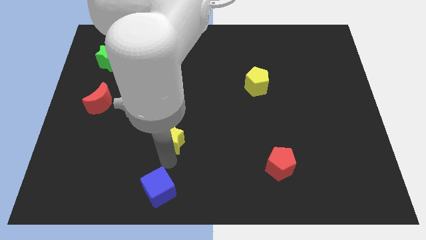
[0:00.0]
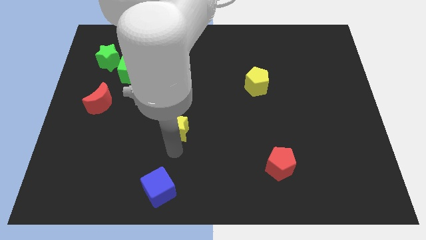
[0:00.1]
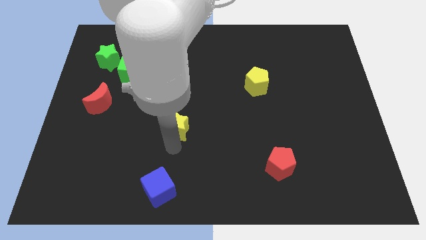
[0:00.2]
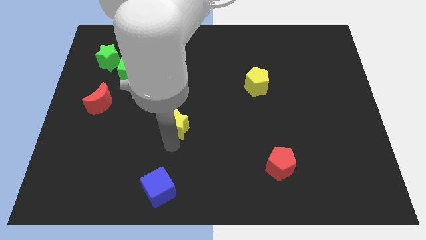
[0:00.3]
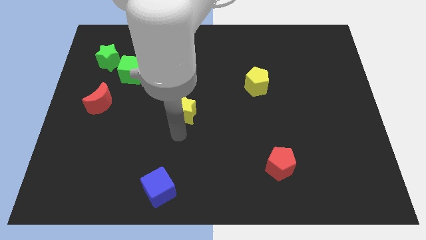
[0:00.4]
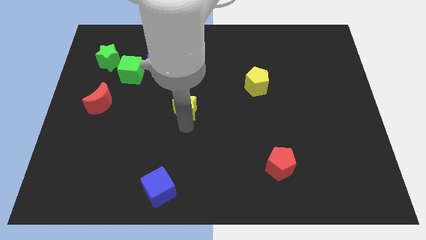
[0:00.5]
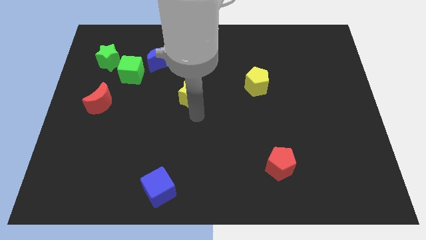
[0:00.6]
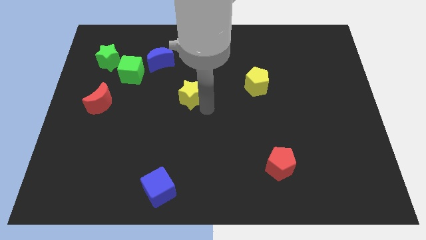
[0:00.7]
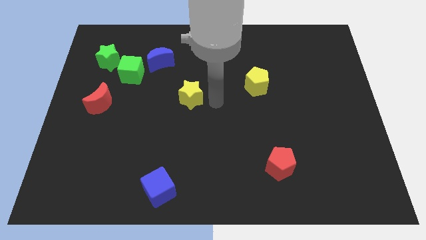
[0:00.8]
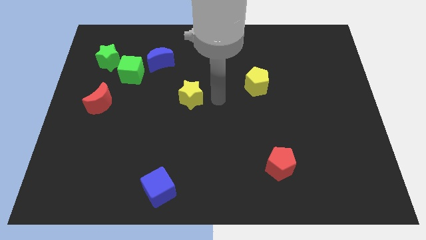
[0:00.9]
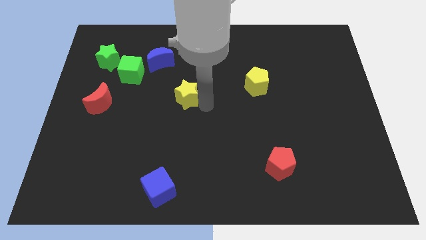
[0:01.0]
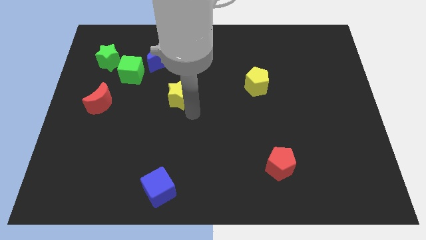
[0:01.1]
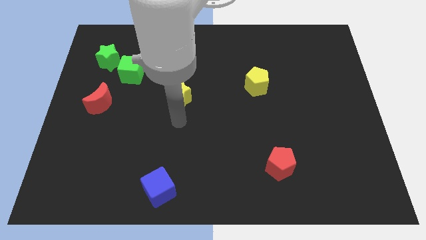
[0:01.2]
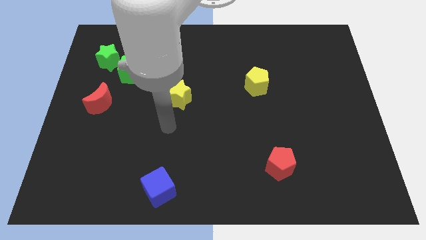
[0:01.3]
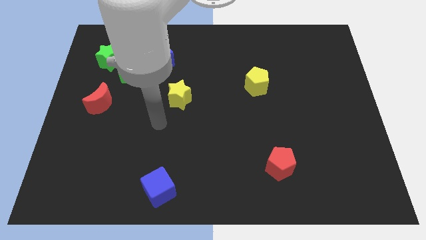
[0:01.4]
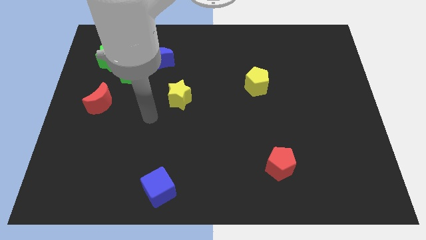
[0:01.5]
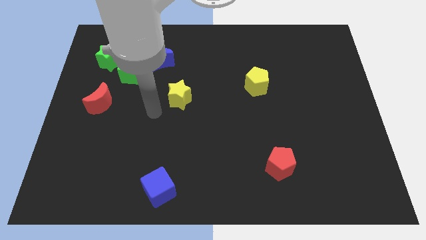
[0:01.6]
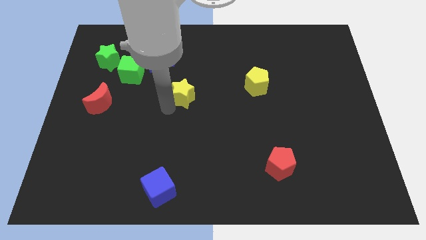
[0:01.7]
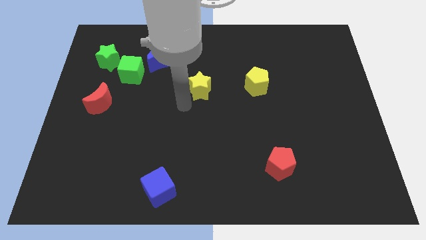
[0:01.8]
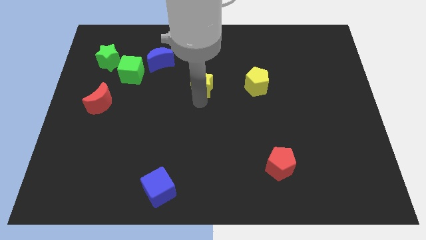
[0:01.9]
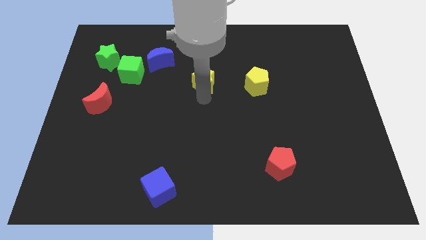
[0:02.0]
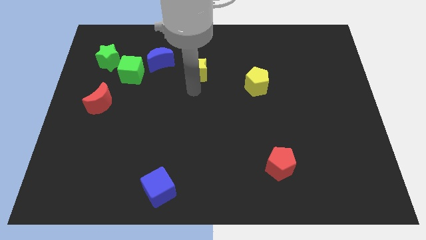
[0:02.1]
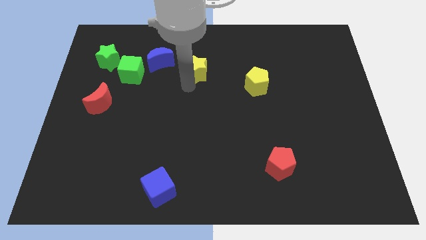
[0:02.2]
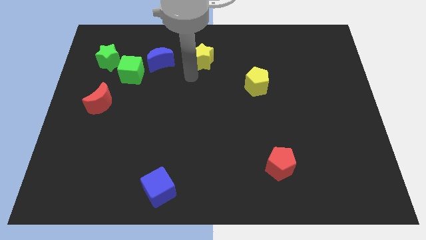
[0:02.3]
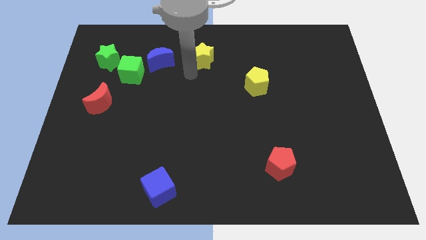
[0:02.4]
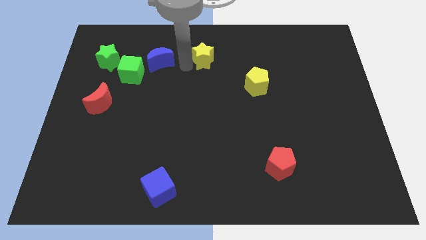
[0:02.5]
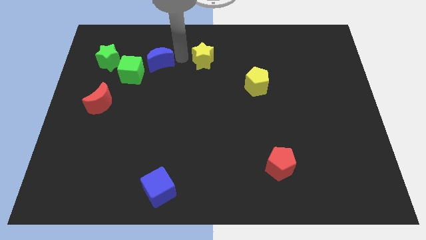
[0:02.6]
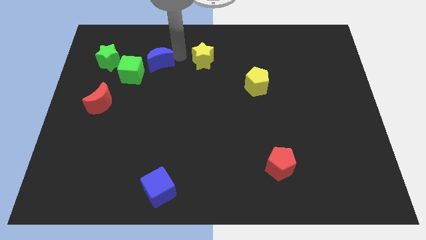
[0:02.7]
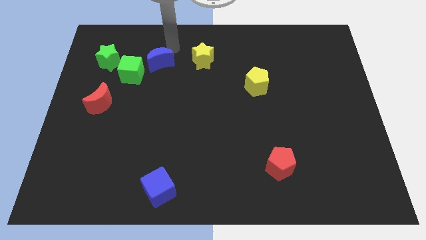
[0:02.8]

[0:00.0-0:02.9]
place the yellow star to the right of the blue moon

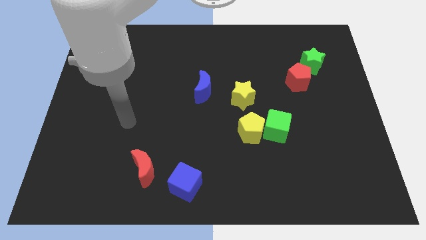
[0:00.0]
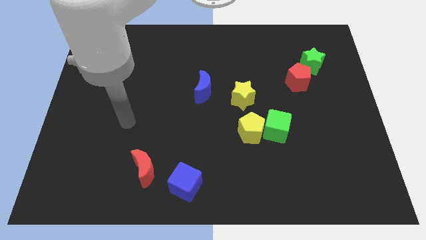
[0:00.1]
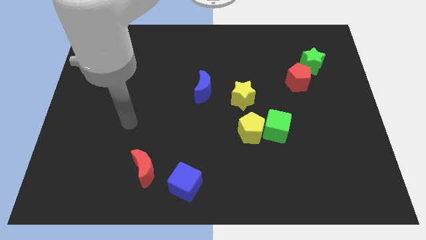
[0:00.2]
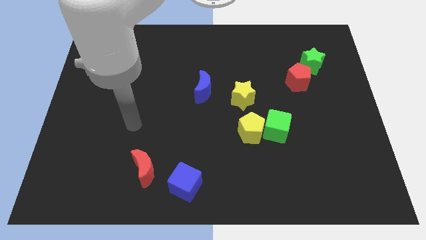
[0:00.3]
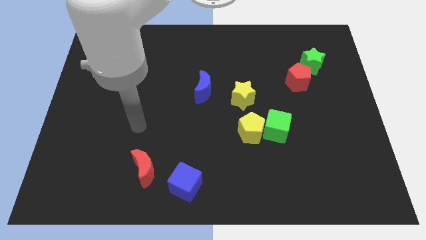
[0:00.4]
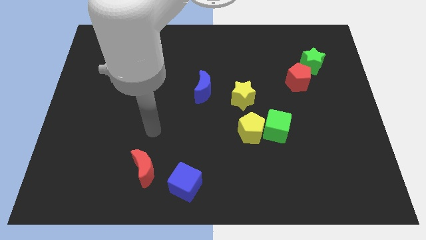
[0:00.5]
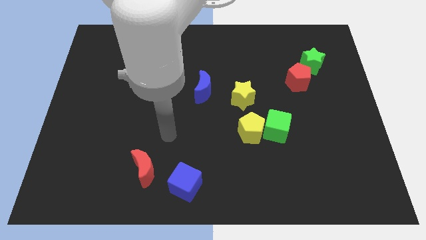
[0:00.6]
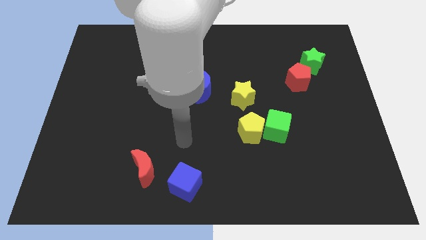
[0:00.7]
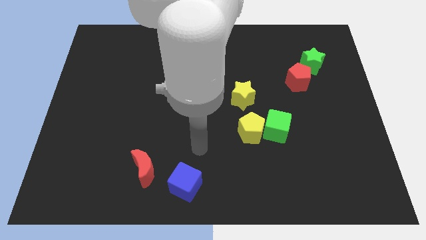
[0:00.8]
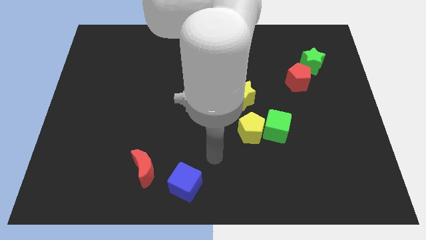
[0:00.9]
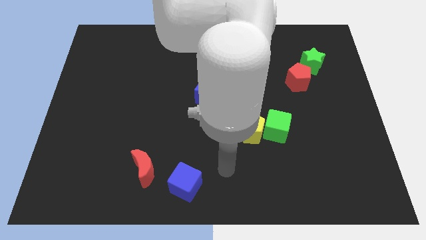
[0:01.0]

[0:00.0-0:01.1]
place your hand in between blue cube and yellow pentagon

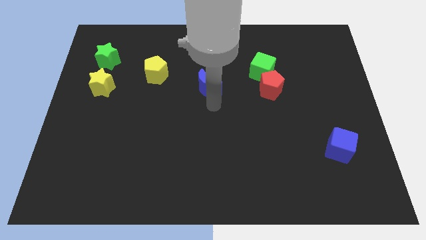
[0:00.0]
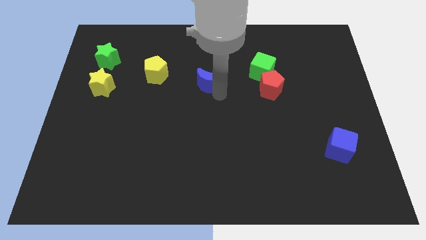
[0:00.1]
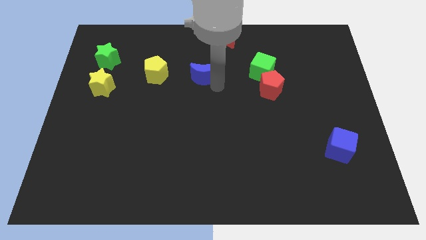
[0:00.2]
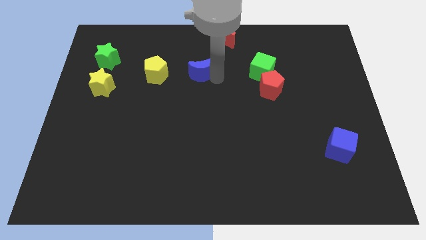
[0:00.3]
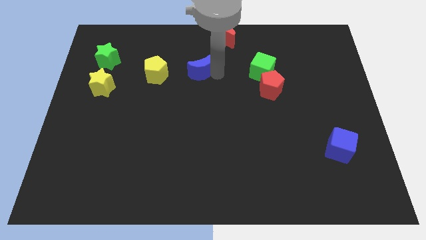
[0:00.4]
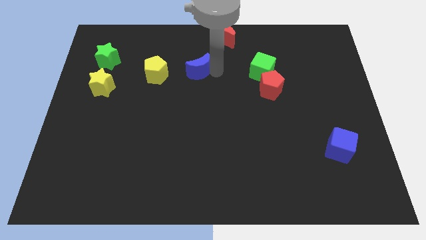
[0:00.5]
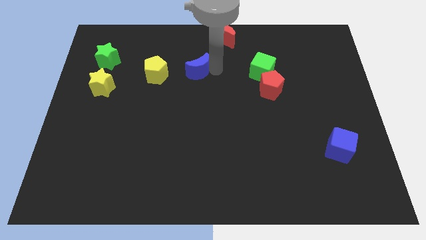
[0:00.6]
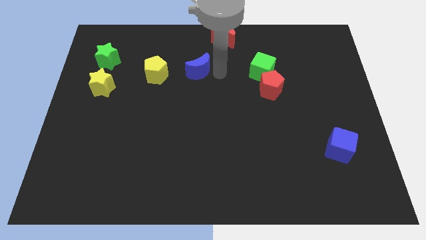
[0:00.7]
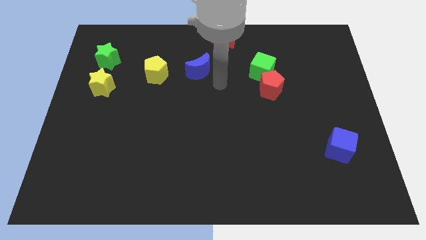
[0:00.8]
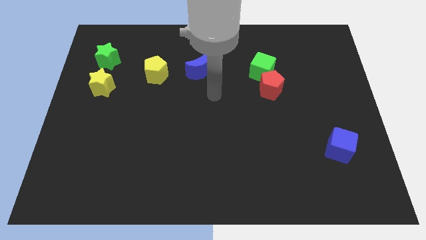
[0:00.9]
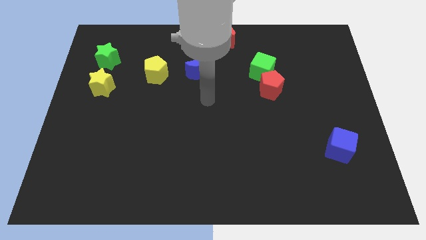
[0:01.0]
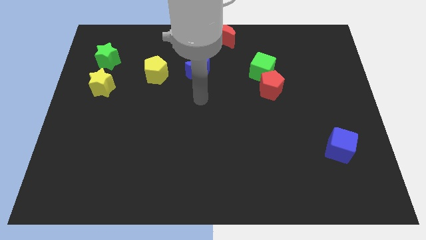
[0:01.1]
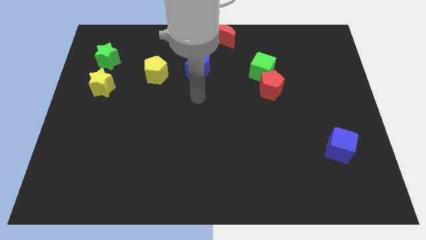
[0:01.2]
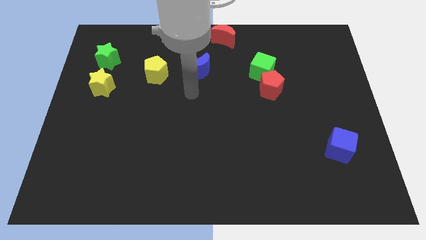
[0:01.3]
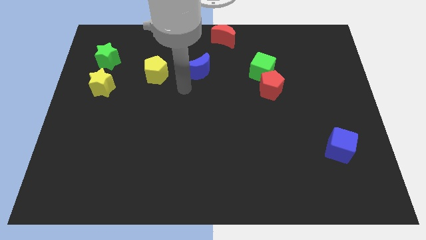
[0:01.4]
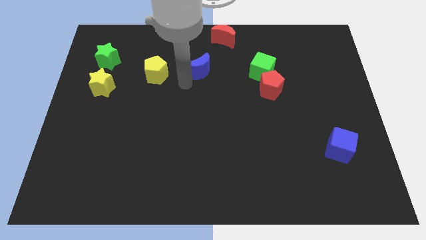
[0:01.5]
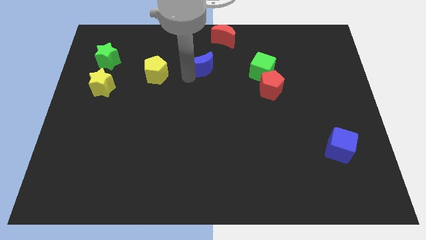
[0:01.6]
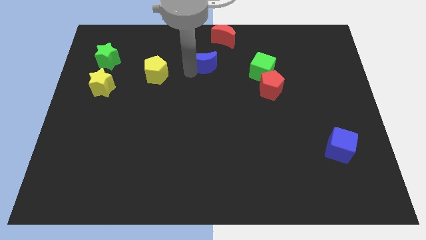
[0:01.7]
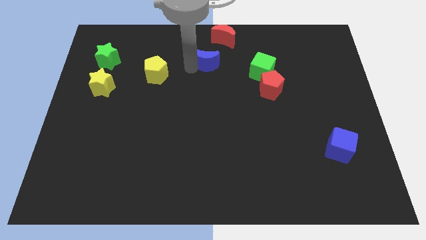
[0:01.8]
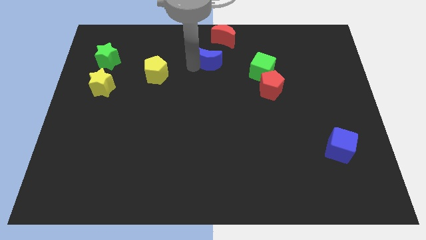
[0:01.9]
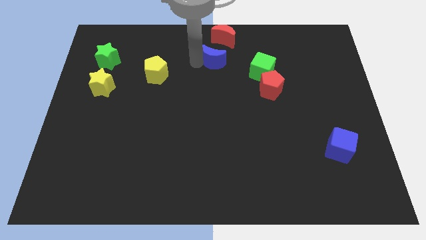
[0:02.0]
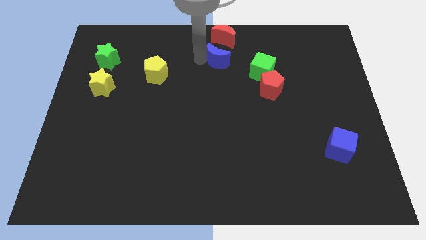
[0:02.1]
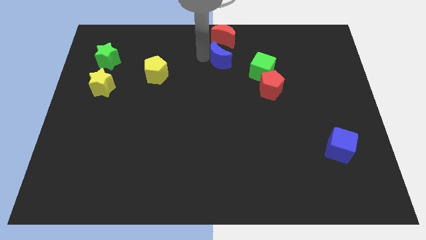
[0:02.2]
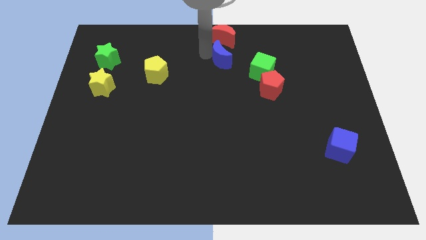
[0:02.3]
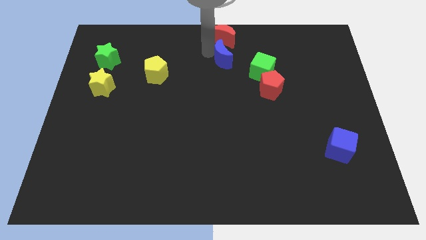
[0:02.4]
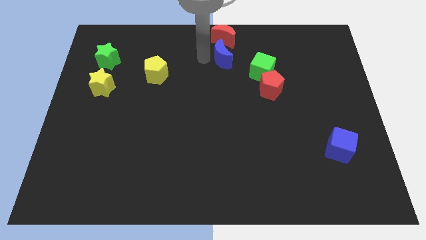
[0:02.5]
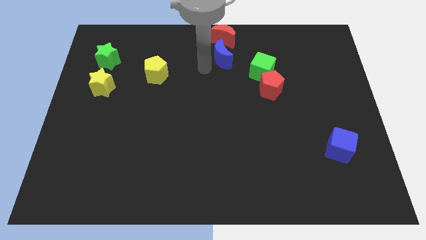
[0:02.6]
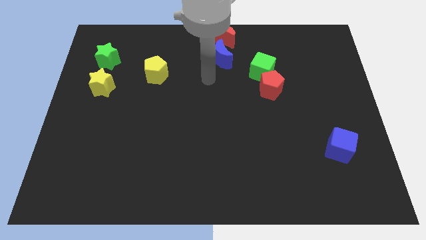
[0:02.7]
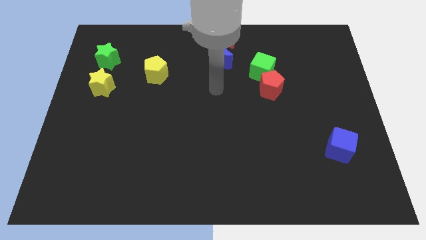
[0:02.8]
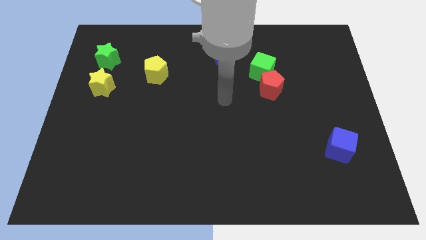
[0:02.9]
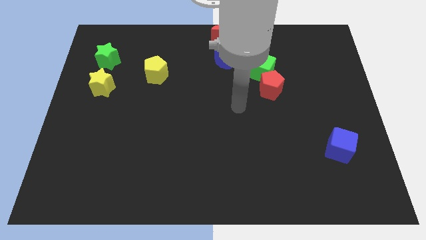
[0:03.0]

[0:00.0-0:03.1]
move the blue crescent below the red crescent

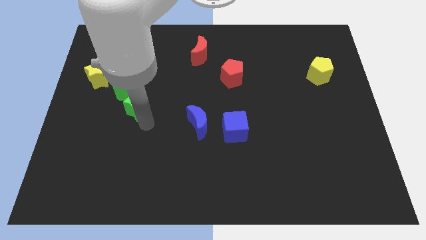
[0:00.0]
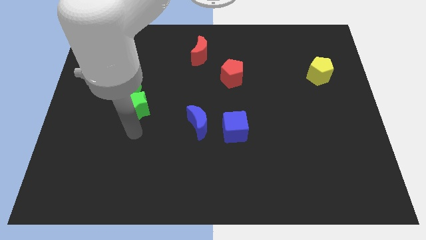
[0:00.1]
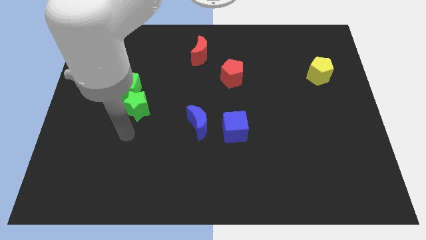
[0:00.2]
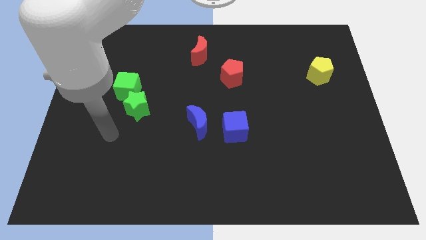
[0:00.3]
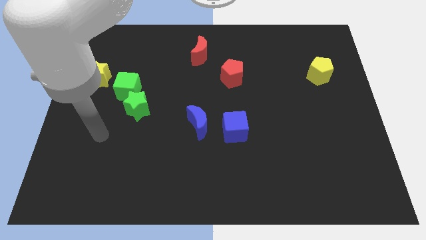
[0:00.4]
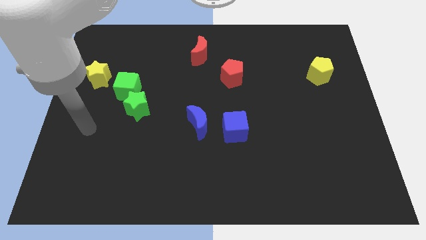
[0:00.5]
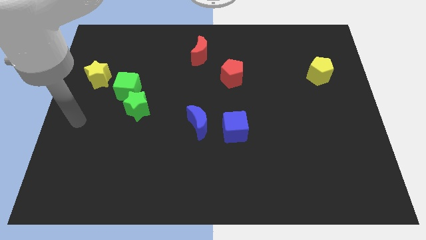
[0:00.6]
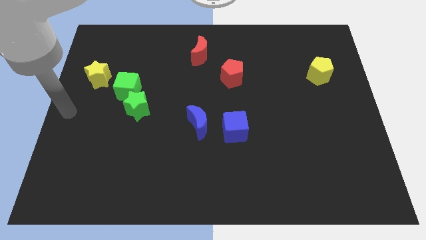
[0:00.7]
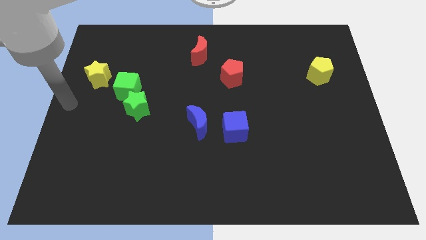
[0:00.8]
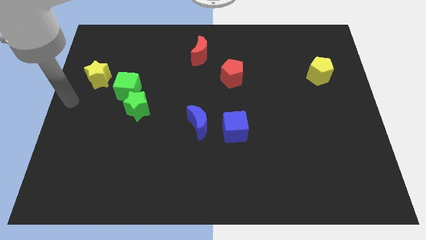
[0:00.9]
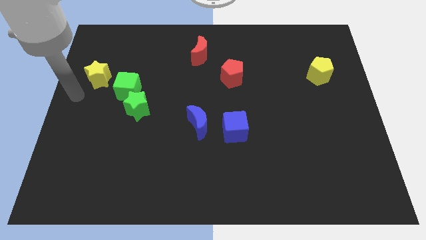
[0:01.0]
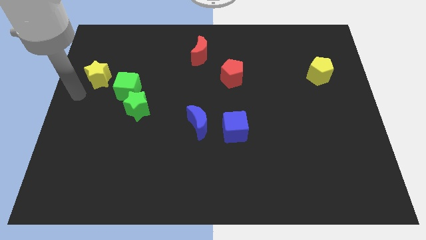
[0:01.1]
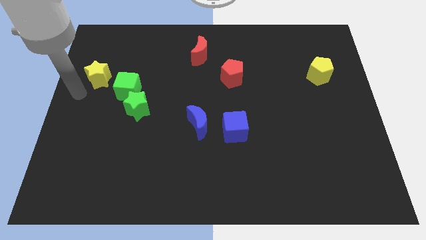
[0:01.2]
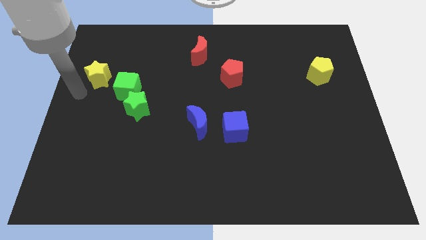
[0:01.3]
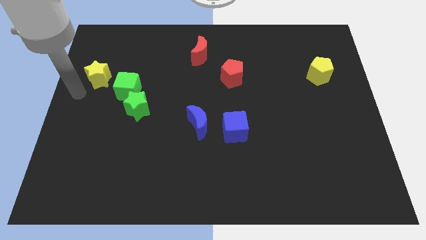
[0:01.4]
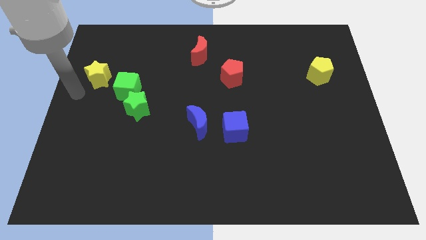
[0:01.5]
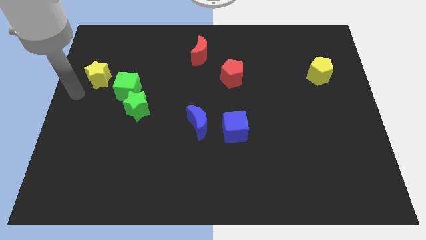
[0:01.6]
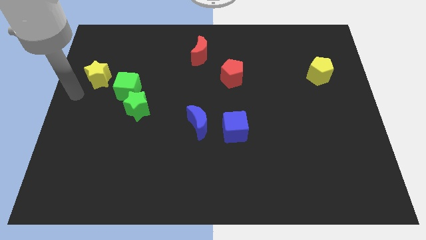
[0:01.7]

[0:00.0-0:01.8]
move the arm at the bottom left side of the yellow star

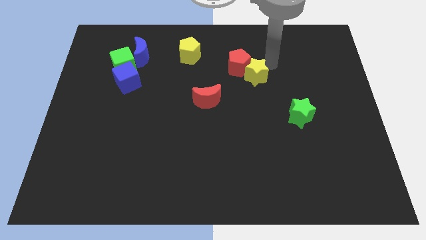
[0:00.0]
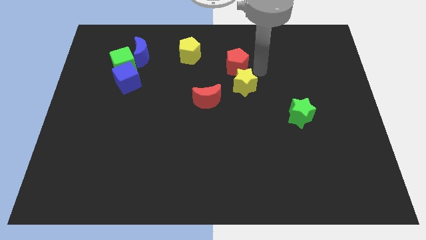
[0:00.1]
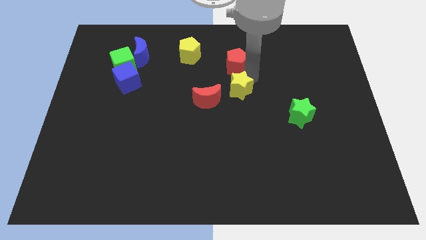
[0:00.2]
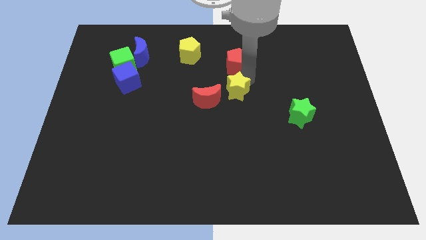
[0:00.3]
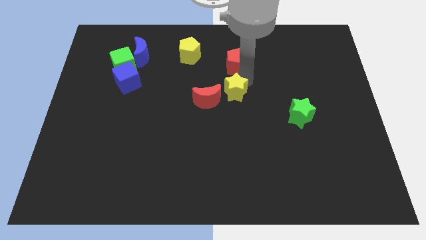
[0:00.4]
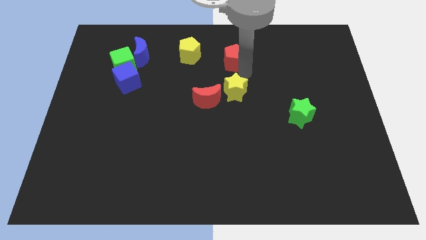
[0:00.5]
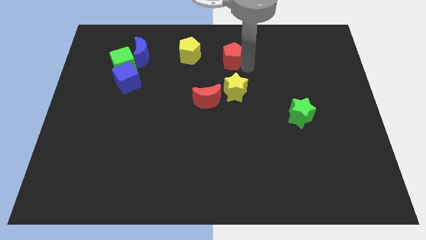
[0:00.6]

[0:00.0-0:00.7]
push the yellow star to the right of red crescent
